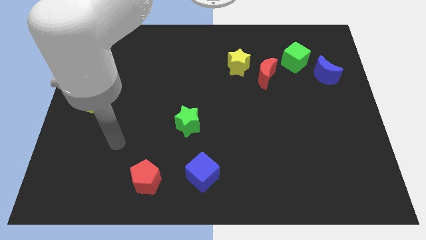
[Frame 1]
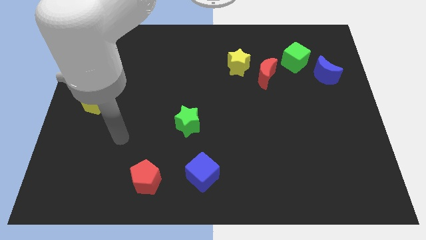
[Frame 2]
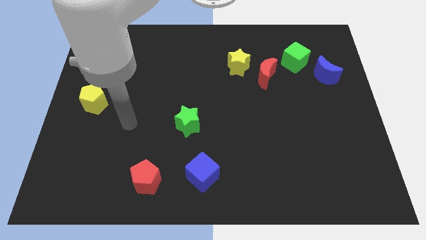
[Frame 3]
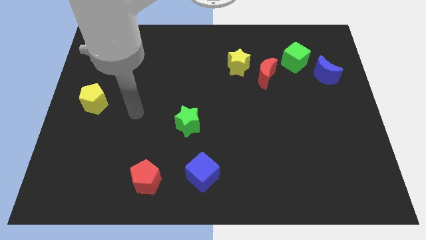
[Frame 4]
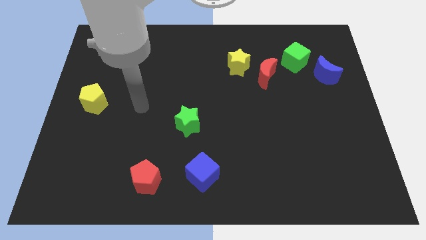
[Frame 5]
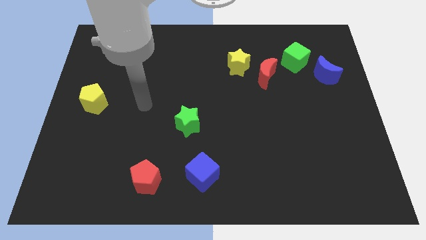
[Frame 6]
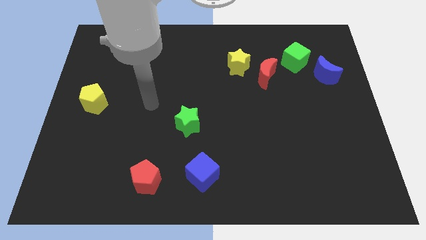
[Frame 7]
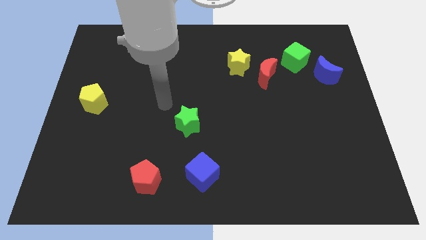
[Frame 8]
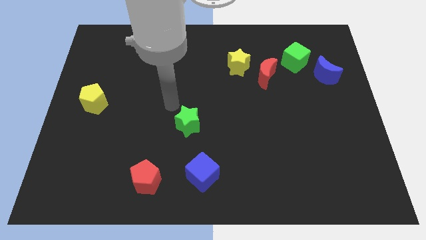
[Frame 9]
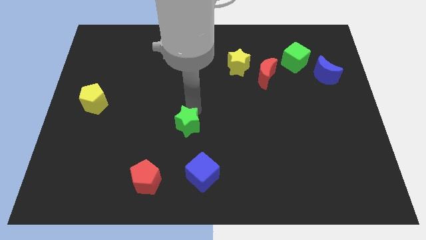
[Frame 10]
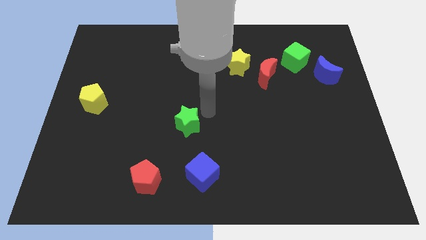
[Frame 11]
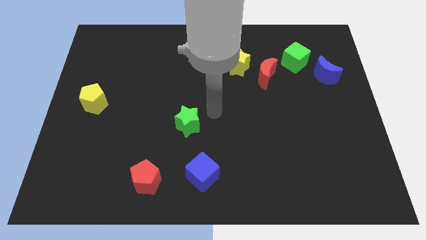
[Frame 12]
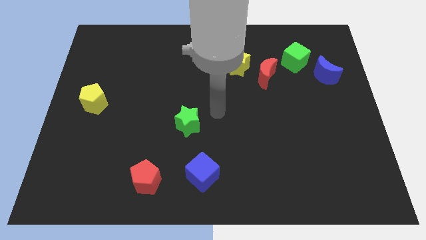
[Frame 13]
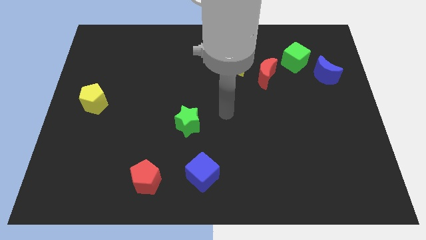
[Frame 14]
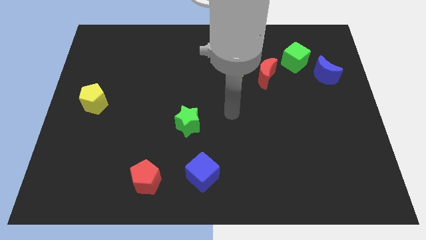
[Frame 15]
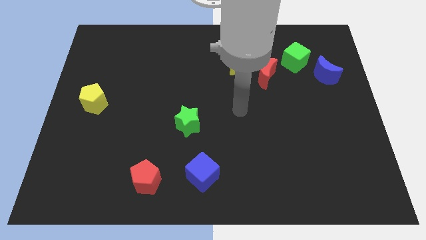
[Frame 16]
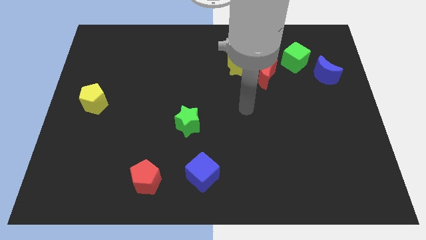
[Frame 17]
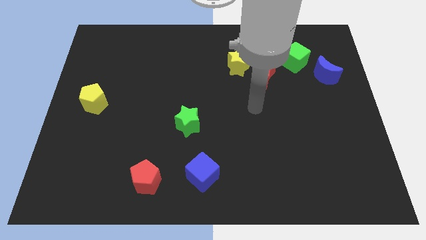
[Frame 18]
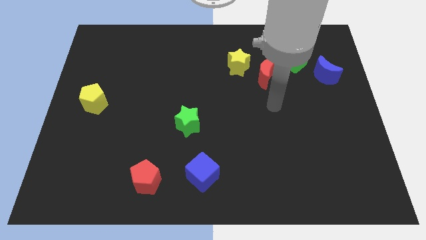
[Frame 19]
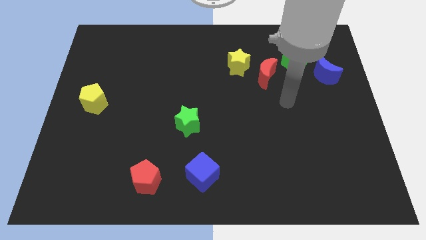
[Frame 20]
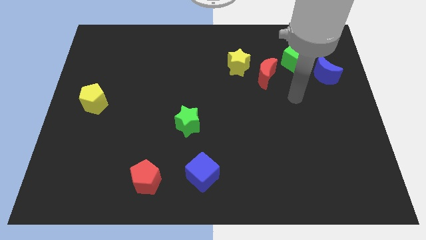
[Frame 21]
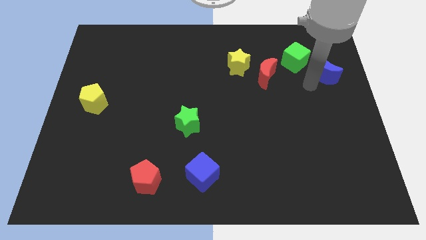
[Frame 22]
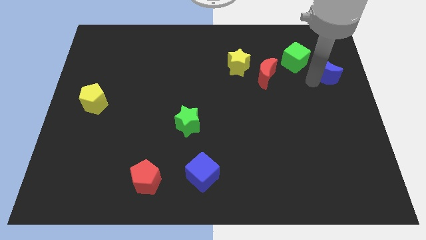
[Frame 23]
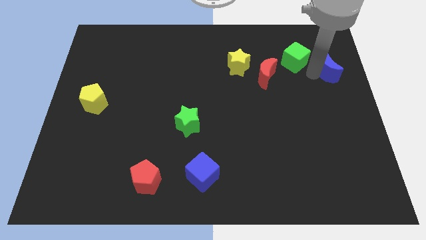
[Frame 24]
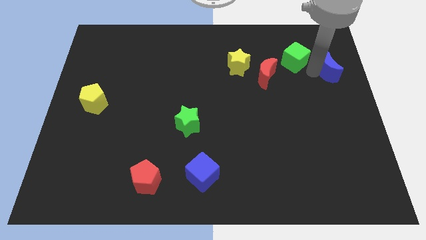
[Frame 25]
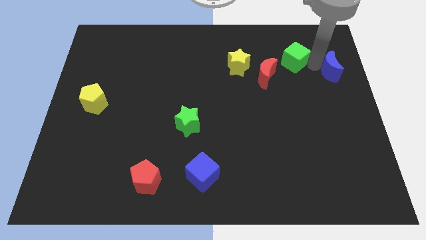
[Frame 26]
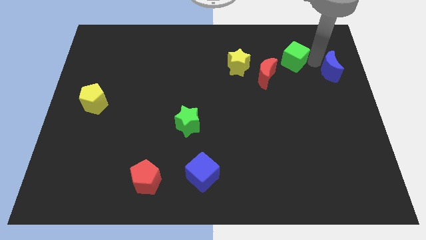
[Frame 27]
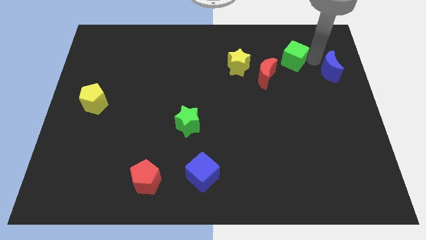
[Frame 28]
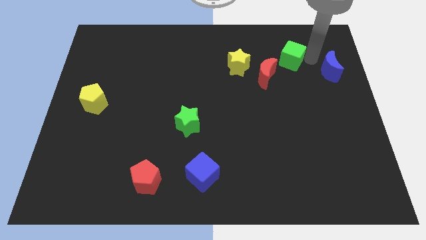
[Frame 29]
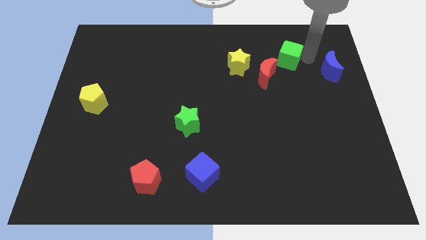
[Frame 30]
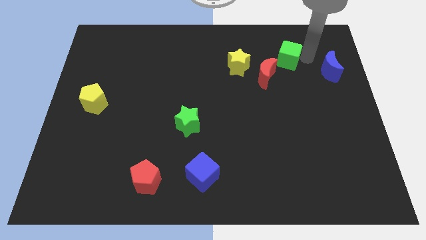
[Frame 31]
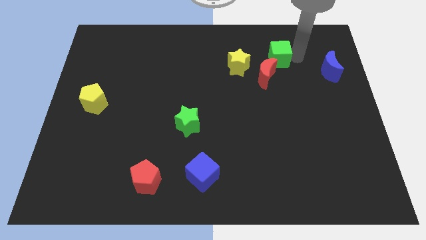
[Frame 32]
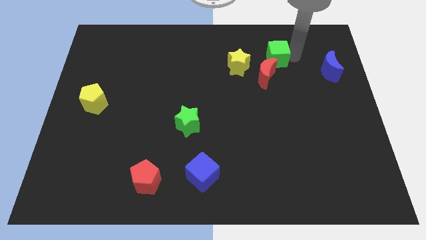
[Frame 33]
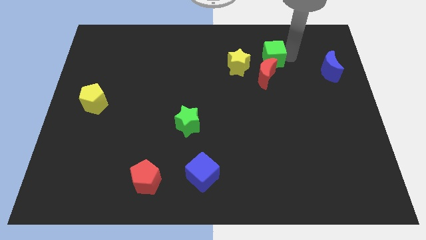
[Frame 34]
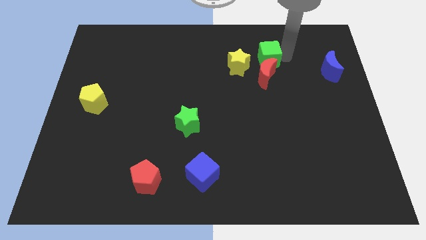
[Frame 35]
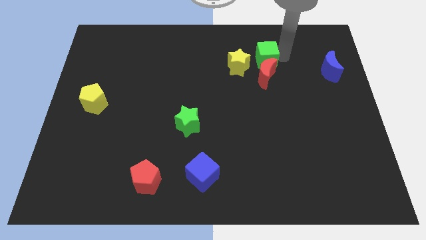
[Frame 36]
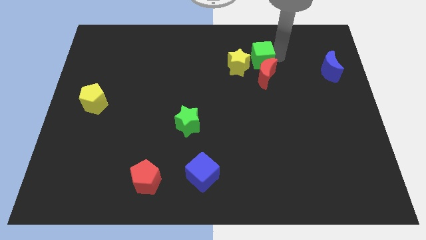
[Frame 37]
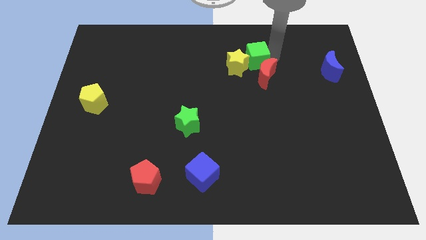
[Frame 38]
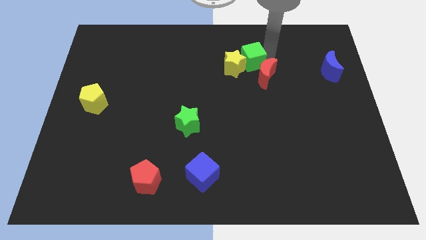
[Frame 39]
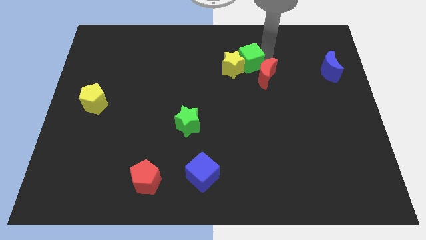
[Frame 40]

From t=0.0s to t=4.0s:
move the green cube next to the yellow star

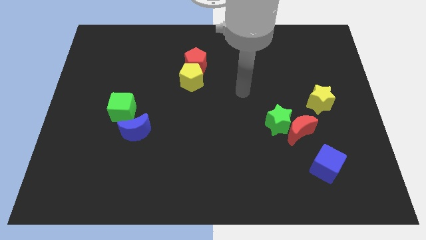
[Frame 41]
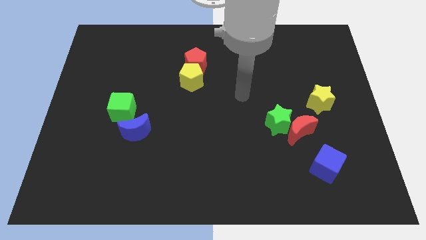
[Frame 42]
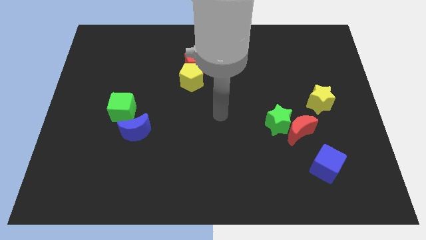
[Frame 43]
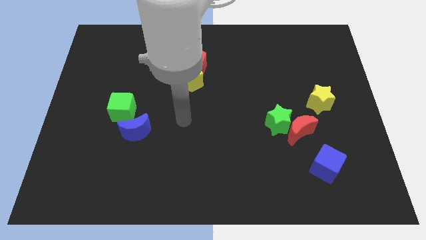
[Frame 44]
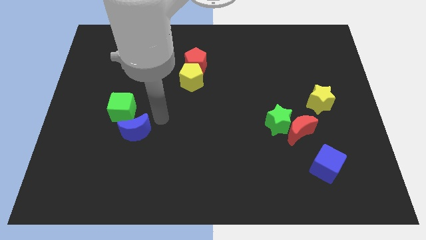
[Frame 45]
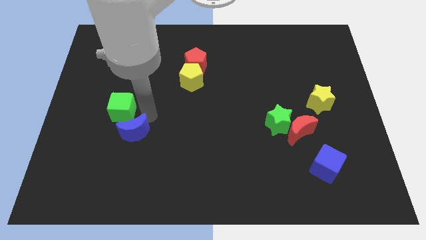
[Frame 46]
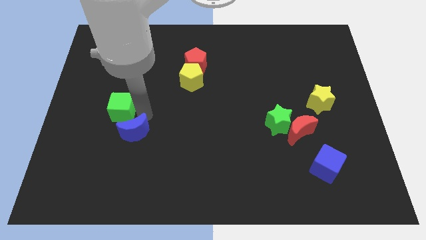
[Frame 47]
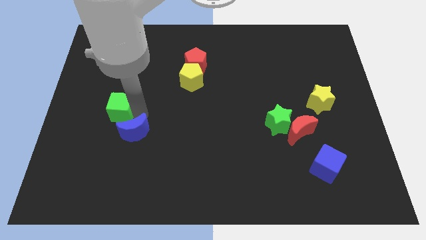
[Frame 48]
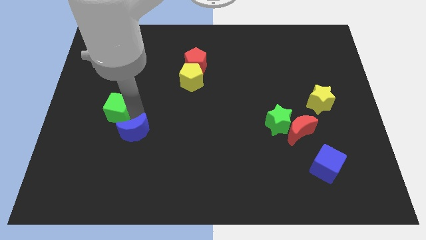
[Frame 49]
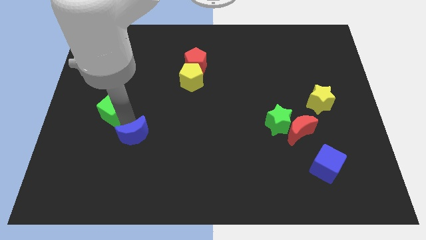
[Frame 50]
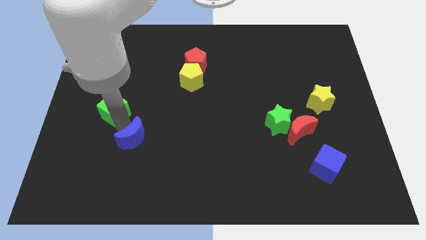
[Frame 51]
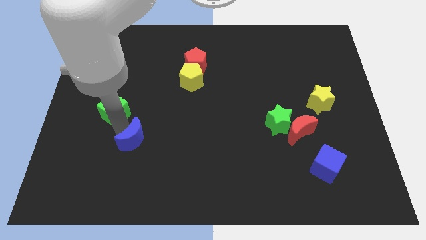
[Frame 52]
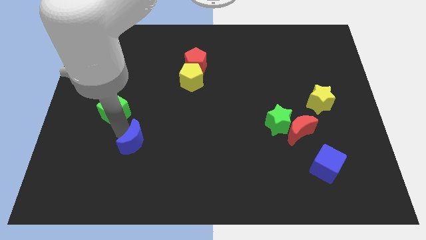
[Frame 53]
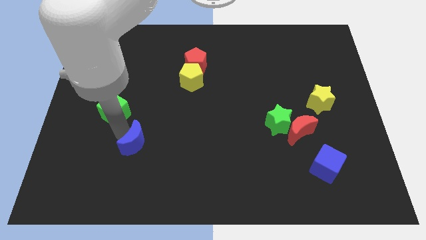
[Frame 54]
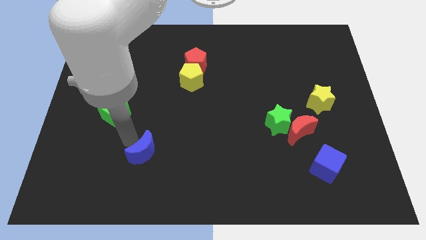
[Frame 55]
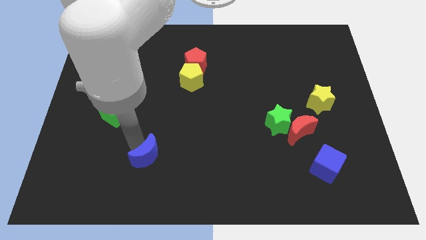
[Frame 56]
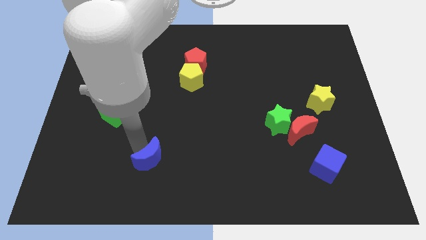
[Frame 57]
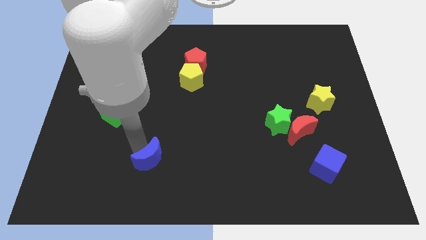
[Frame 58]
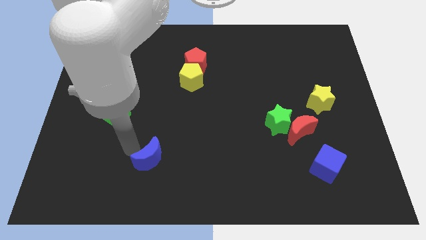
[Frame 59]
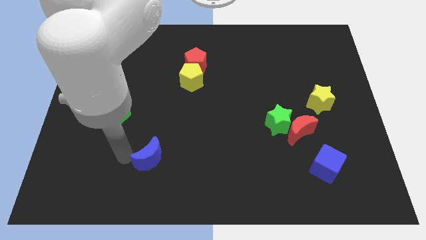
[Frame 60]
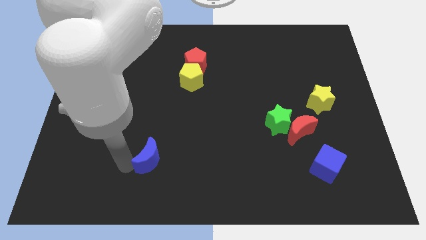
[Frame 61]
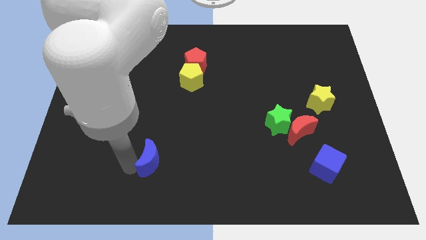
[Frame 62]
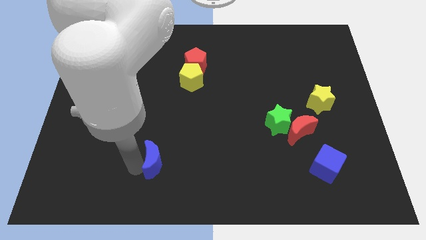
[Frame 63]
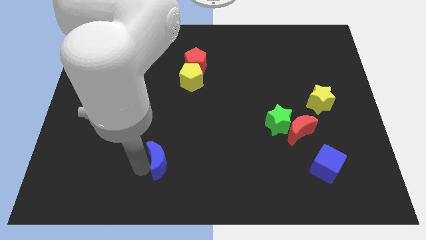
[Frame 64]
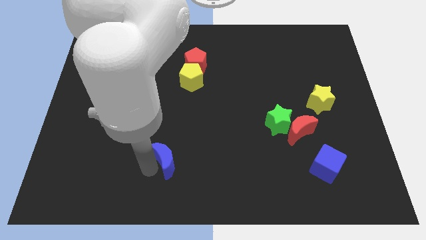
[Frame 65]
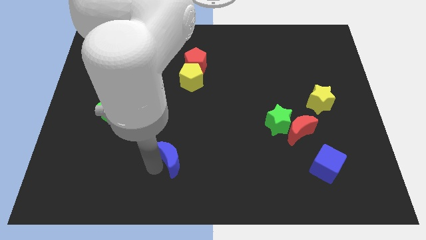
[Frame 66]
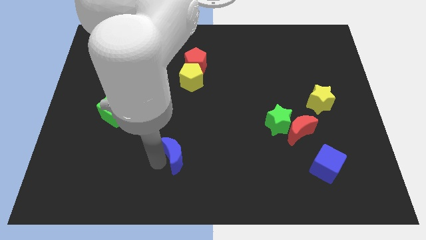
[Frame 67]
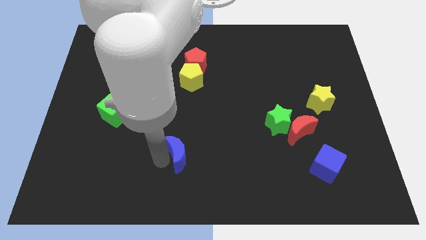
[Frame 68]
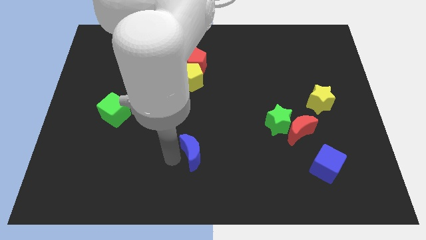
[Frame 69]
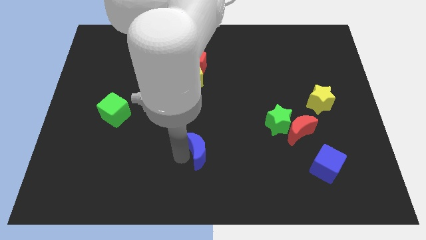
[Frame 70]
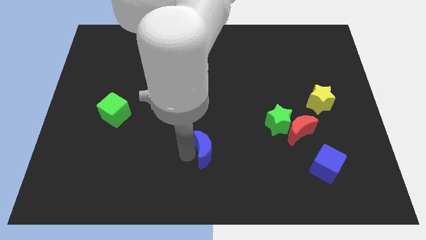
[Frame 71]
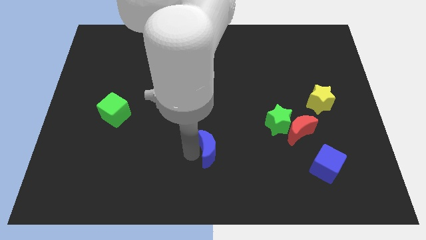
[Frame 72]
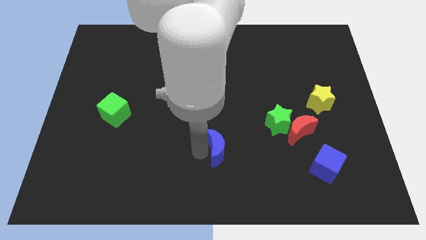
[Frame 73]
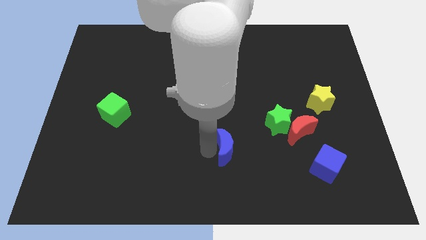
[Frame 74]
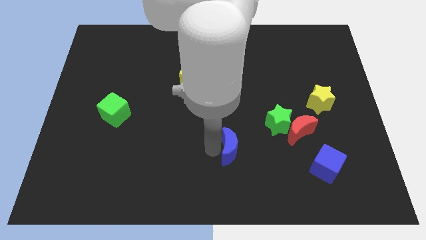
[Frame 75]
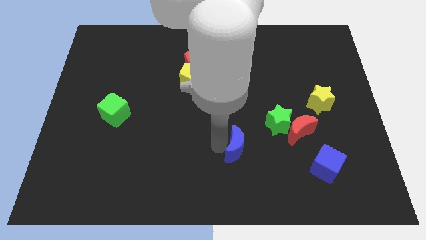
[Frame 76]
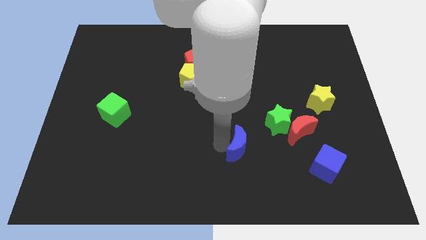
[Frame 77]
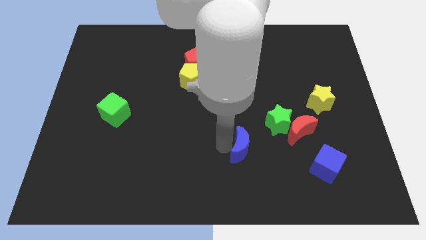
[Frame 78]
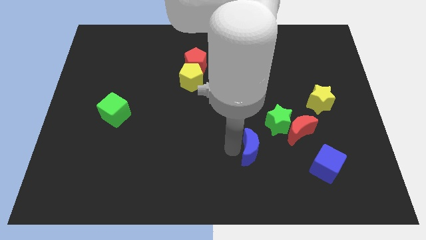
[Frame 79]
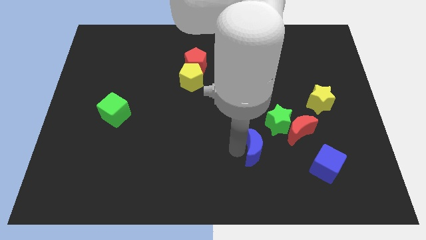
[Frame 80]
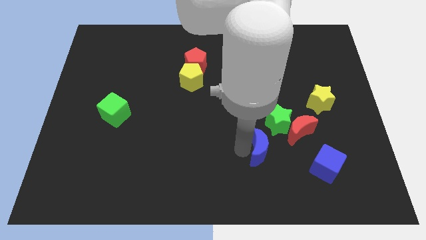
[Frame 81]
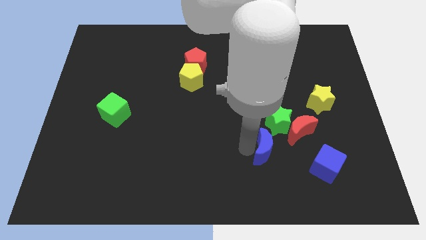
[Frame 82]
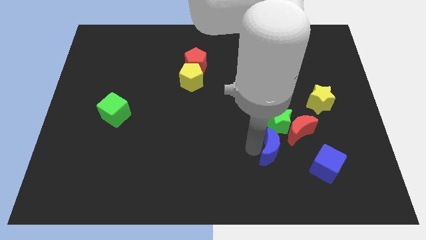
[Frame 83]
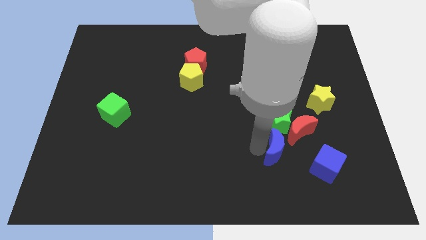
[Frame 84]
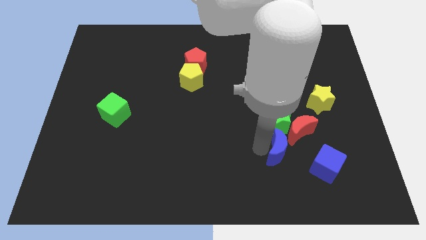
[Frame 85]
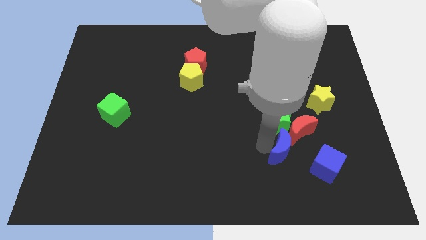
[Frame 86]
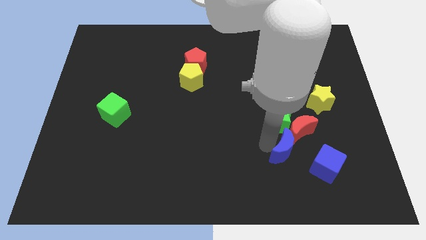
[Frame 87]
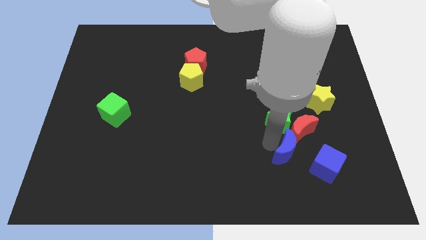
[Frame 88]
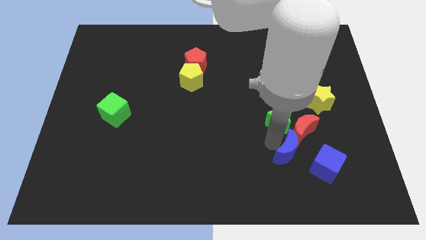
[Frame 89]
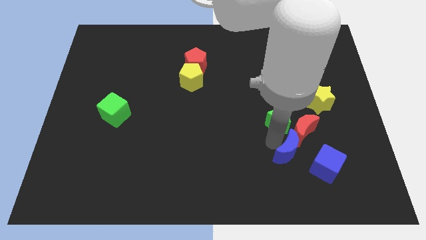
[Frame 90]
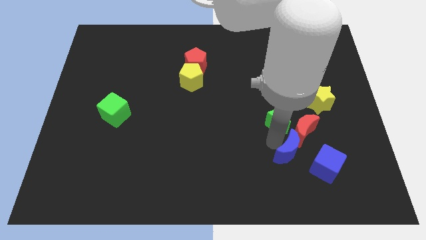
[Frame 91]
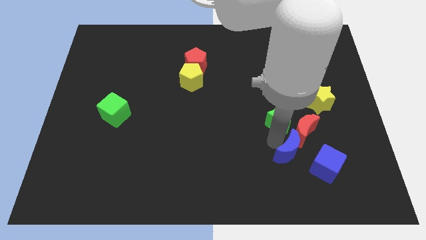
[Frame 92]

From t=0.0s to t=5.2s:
slide the blue moon next to the red moon
